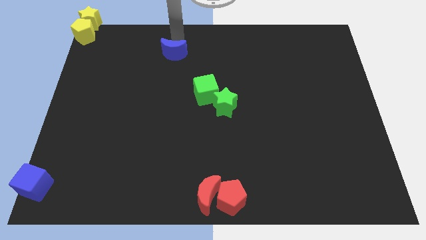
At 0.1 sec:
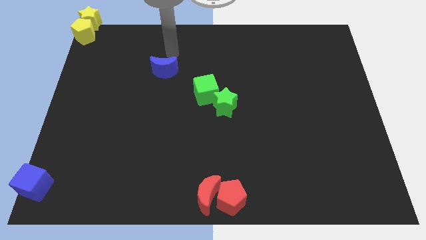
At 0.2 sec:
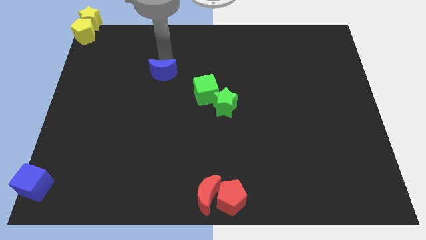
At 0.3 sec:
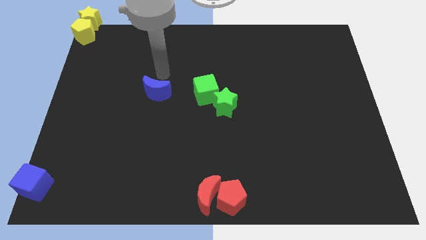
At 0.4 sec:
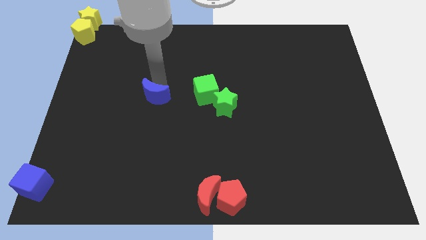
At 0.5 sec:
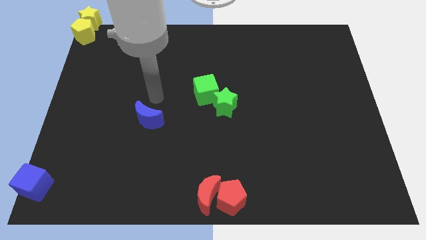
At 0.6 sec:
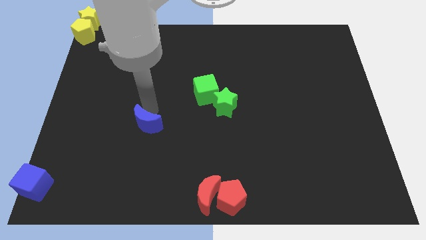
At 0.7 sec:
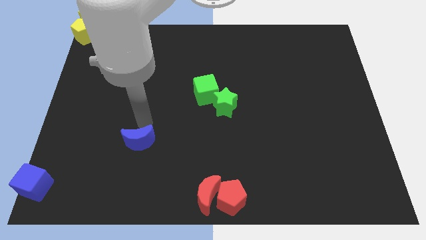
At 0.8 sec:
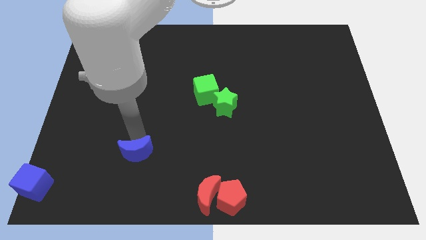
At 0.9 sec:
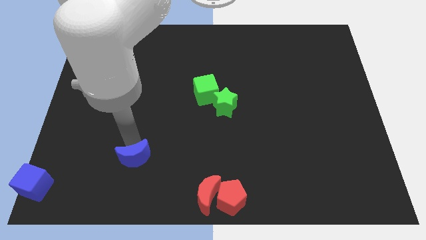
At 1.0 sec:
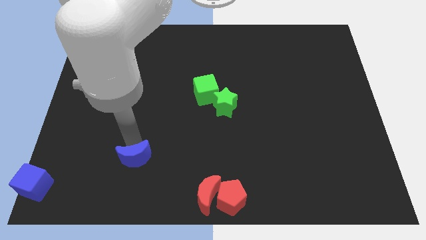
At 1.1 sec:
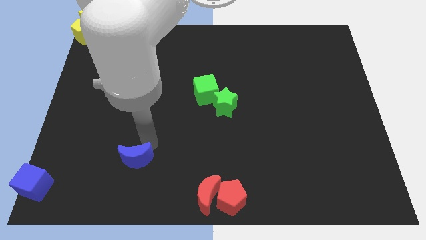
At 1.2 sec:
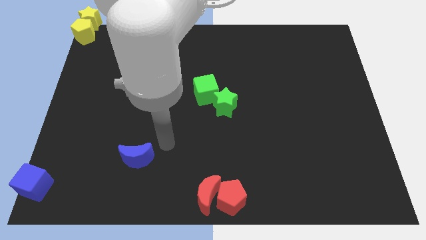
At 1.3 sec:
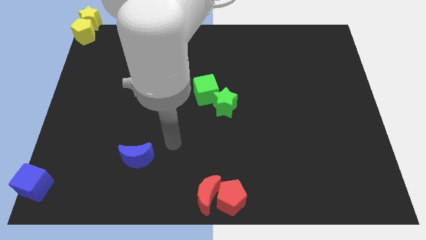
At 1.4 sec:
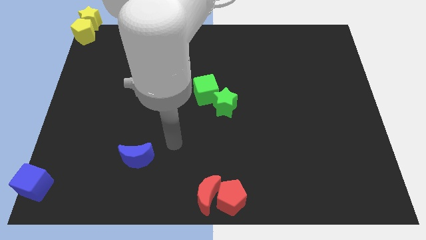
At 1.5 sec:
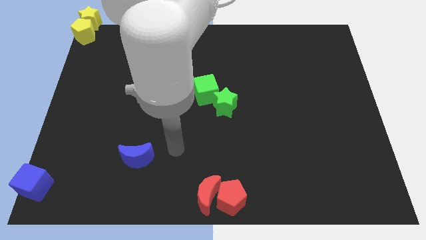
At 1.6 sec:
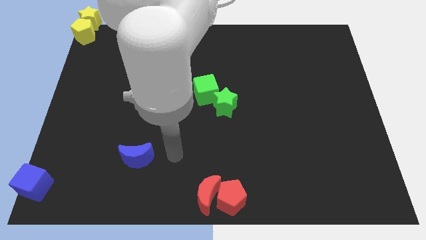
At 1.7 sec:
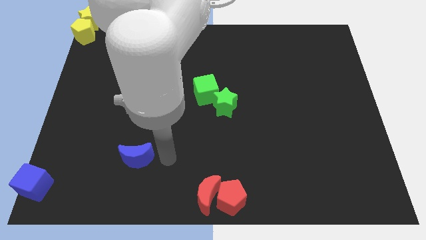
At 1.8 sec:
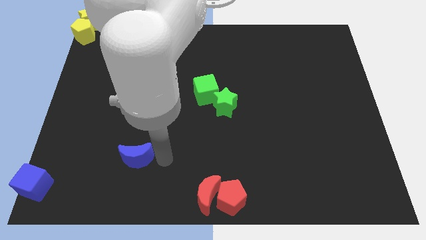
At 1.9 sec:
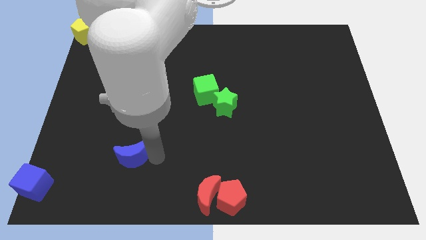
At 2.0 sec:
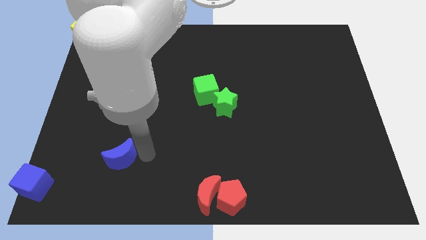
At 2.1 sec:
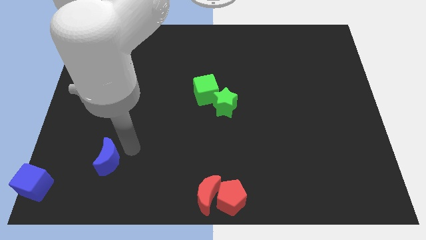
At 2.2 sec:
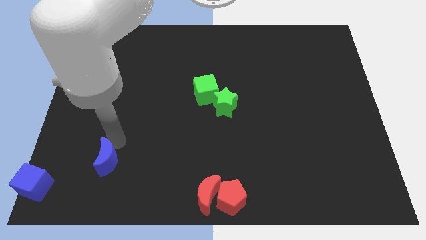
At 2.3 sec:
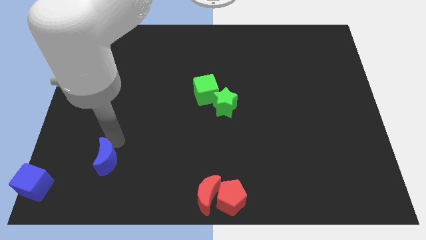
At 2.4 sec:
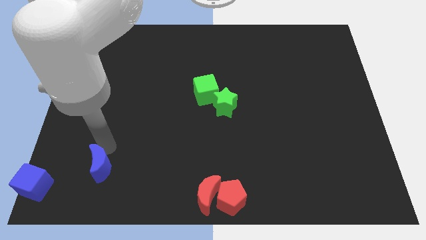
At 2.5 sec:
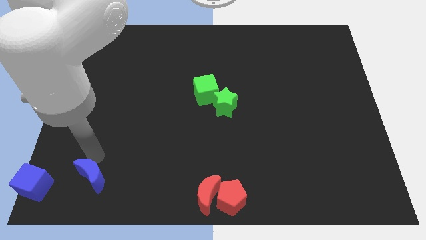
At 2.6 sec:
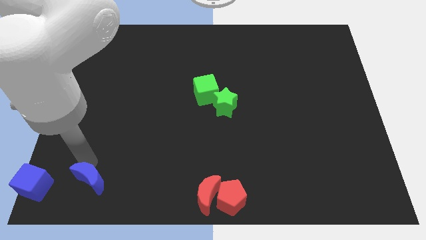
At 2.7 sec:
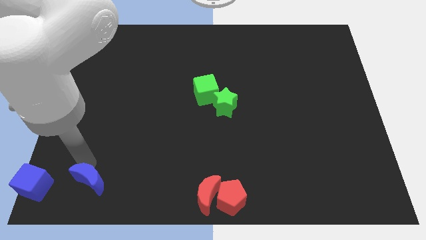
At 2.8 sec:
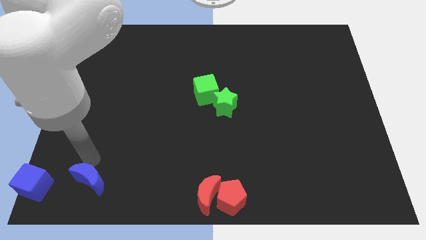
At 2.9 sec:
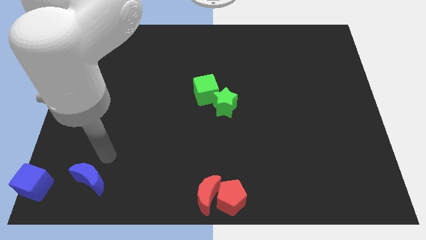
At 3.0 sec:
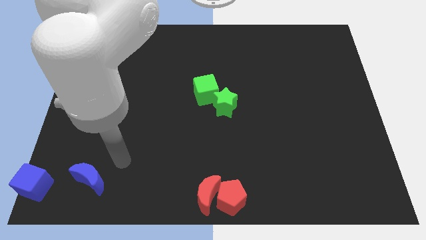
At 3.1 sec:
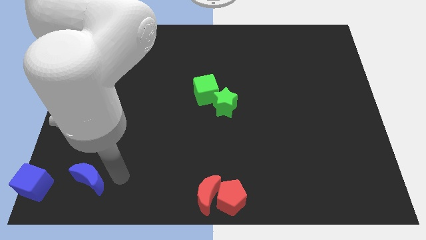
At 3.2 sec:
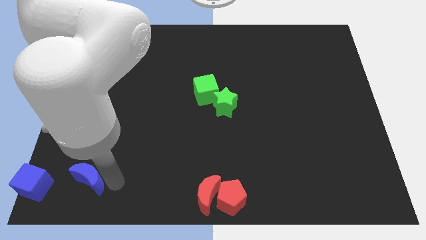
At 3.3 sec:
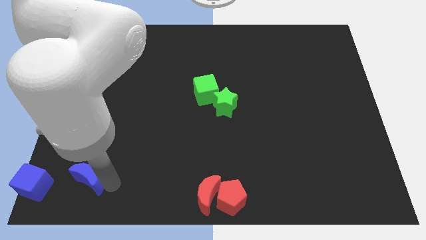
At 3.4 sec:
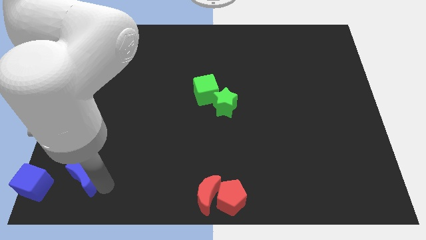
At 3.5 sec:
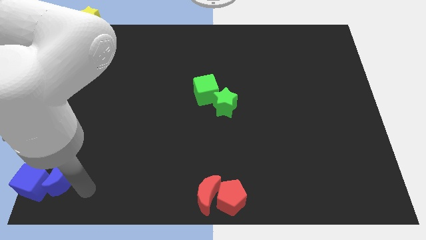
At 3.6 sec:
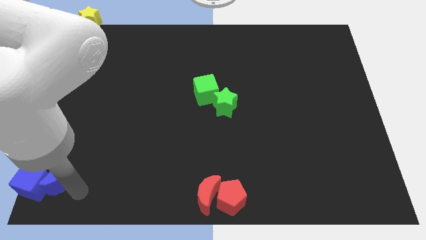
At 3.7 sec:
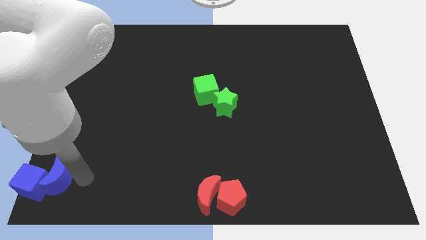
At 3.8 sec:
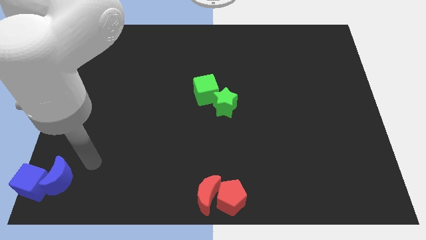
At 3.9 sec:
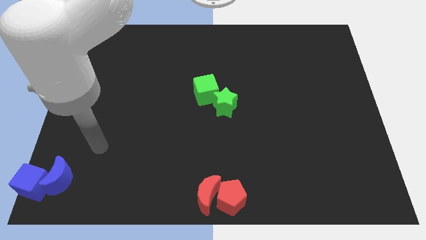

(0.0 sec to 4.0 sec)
push the blue crescent right to the blue cube

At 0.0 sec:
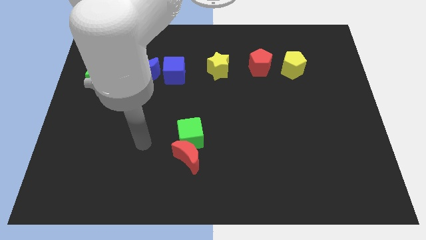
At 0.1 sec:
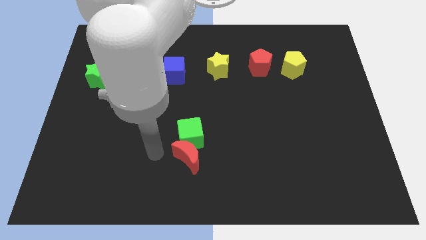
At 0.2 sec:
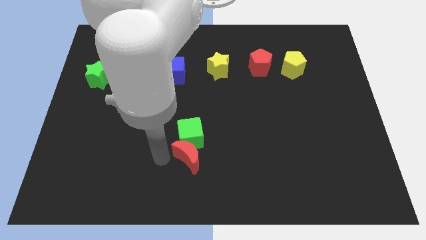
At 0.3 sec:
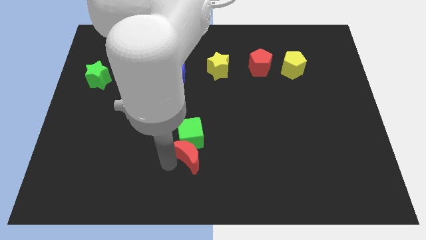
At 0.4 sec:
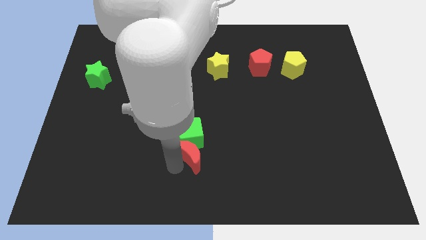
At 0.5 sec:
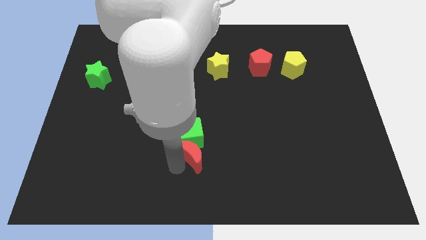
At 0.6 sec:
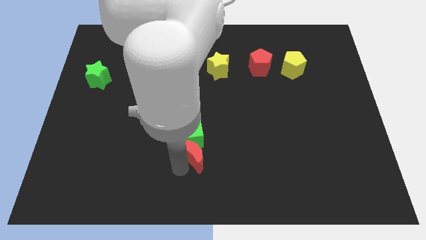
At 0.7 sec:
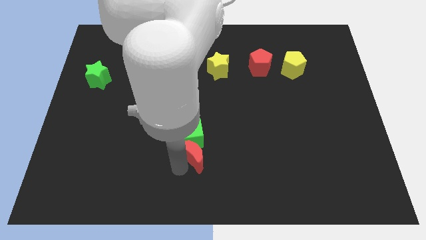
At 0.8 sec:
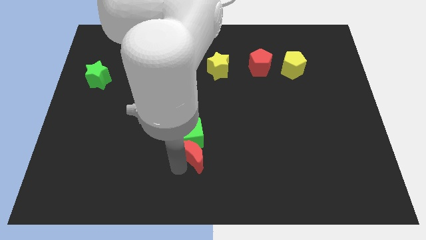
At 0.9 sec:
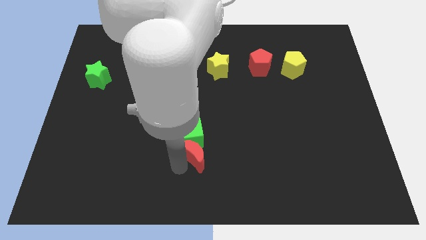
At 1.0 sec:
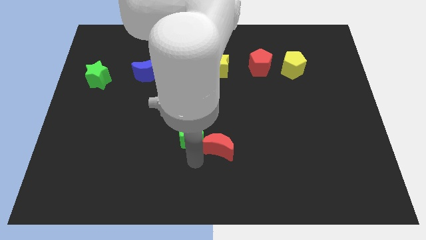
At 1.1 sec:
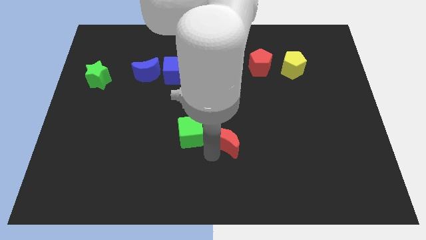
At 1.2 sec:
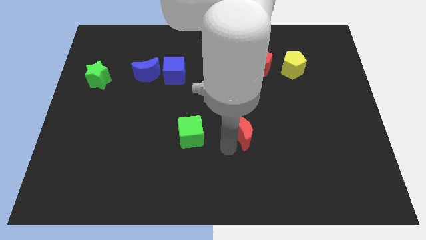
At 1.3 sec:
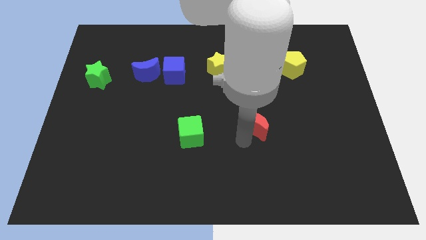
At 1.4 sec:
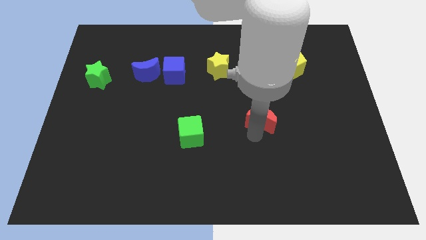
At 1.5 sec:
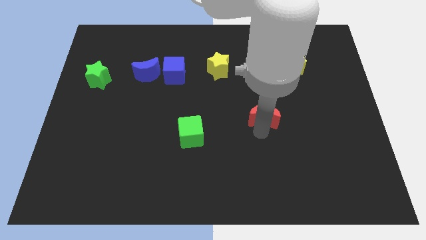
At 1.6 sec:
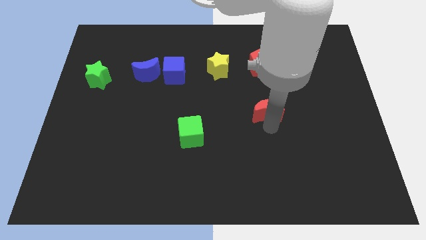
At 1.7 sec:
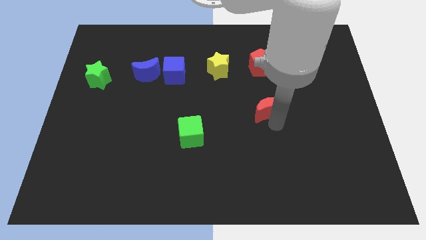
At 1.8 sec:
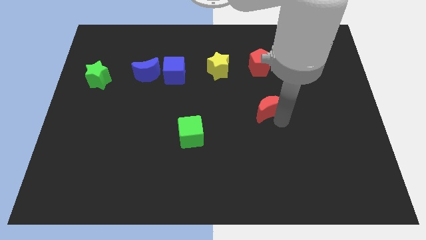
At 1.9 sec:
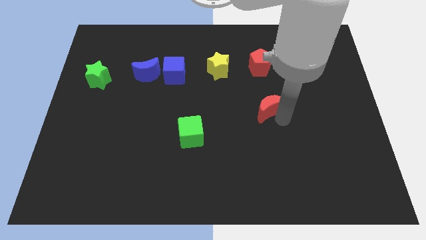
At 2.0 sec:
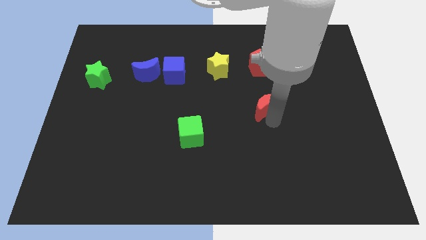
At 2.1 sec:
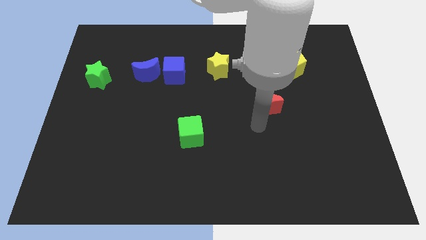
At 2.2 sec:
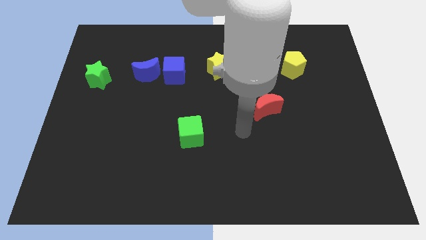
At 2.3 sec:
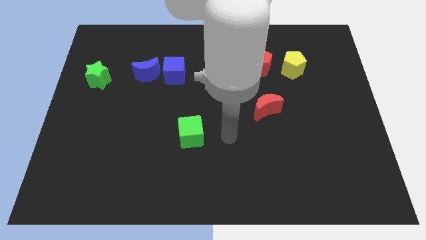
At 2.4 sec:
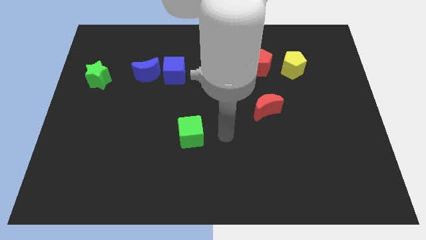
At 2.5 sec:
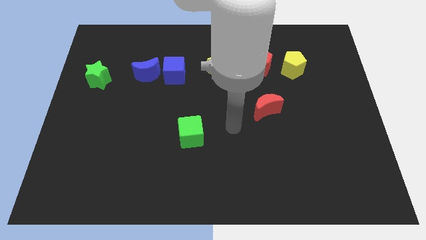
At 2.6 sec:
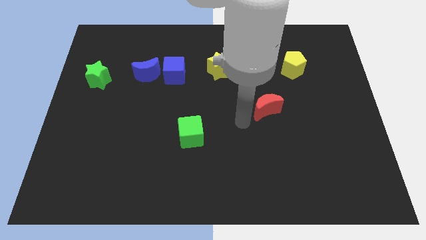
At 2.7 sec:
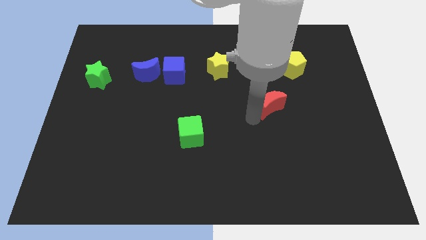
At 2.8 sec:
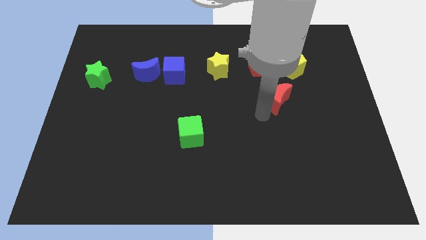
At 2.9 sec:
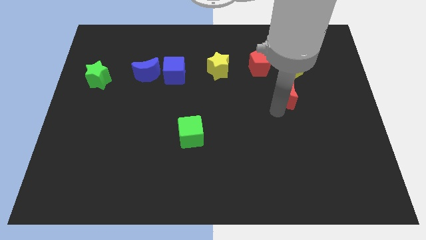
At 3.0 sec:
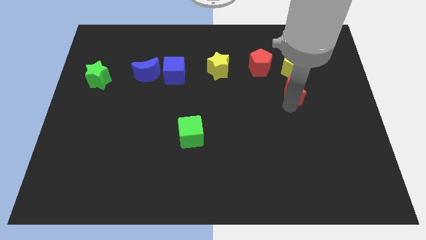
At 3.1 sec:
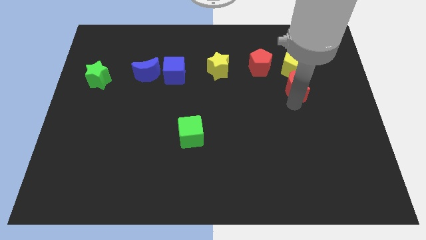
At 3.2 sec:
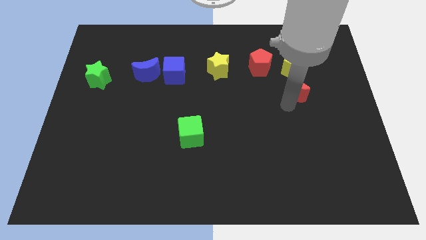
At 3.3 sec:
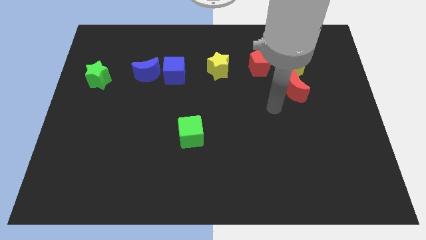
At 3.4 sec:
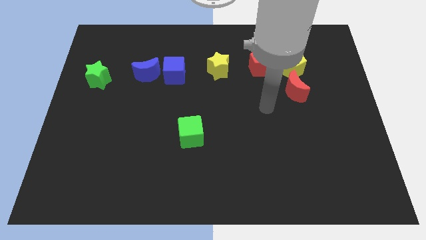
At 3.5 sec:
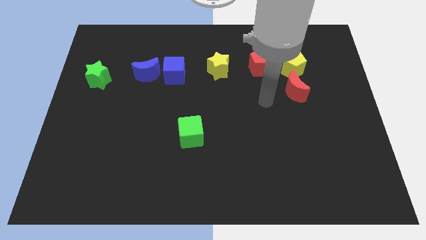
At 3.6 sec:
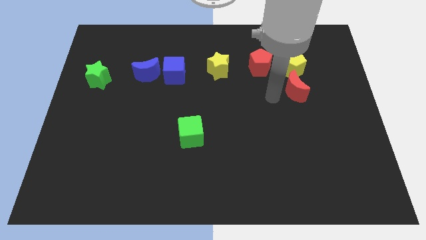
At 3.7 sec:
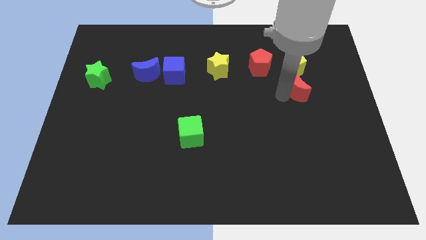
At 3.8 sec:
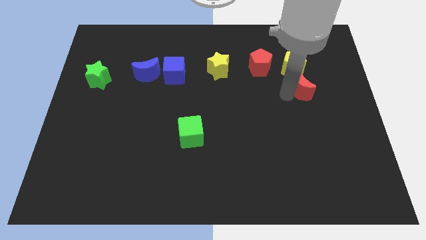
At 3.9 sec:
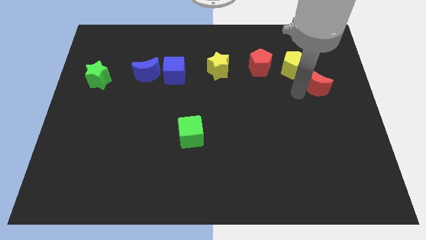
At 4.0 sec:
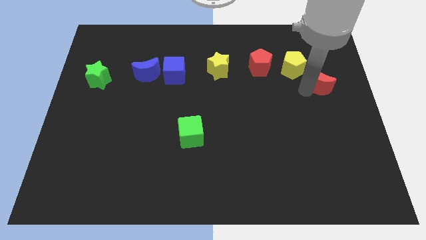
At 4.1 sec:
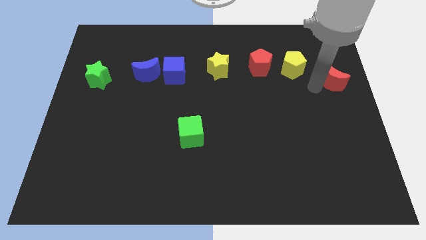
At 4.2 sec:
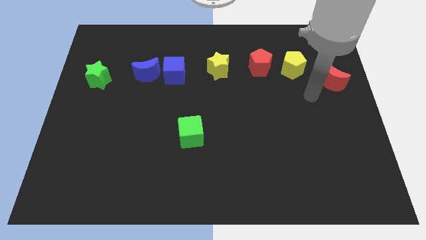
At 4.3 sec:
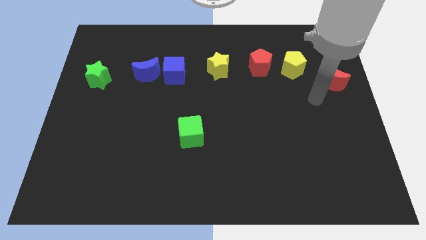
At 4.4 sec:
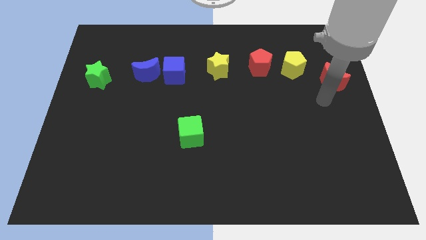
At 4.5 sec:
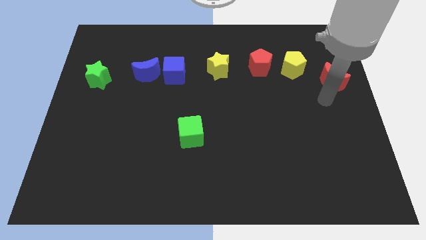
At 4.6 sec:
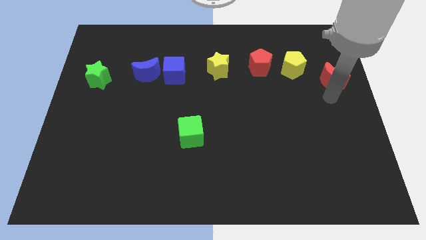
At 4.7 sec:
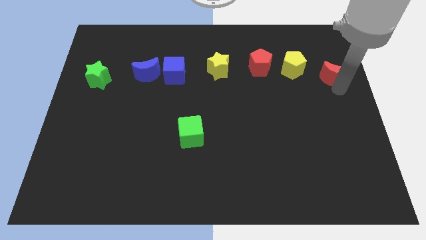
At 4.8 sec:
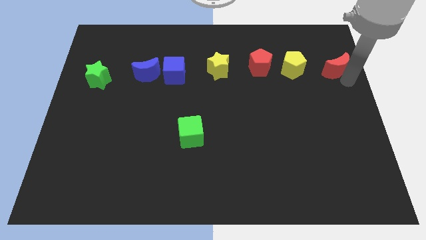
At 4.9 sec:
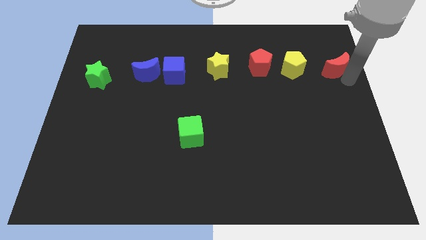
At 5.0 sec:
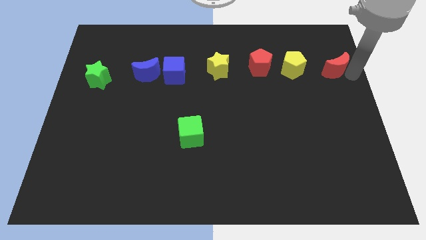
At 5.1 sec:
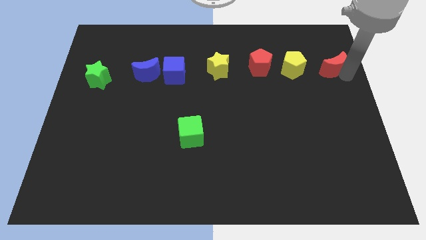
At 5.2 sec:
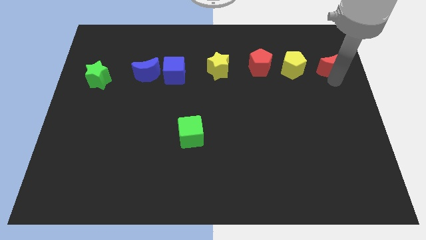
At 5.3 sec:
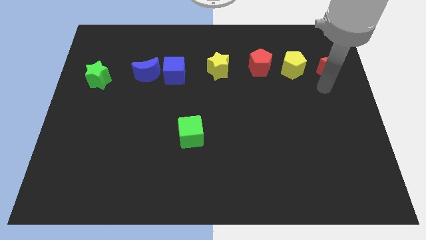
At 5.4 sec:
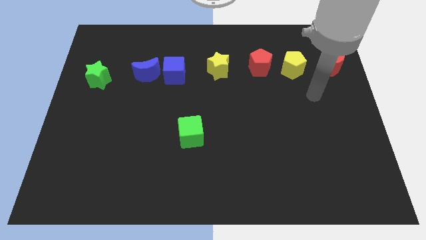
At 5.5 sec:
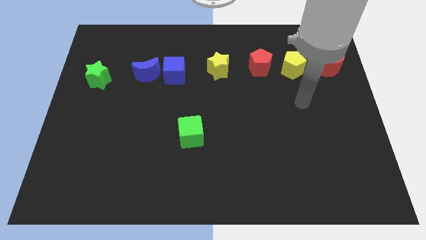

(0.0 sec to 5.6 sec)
push the red moon to the right side of the yellow pentagon
